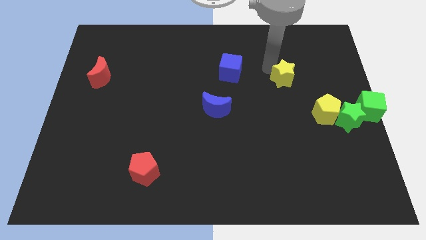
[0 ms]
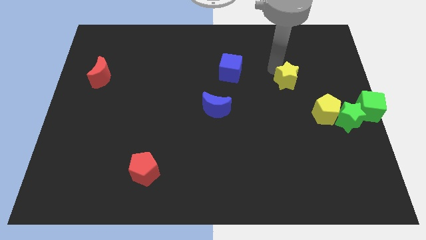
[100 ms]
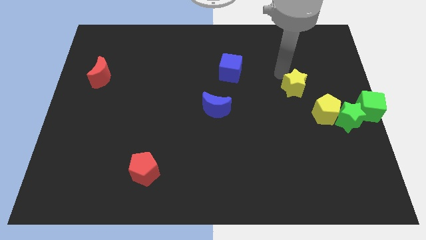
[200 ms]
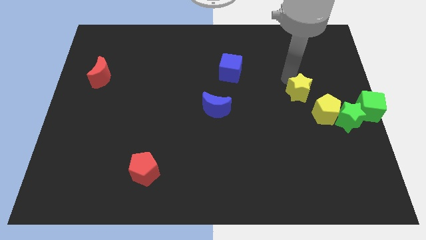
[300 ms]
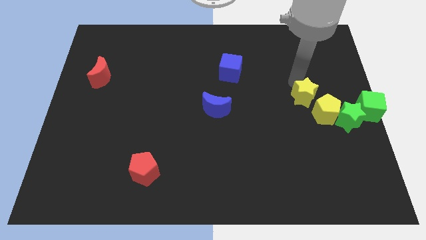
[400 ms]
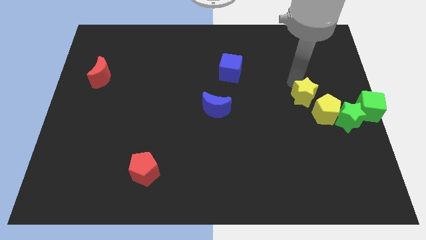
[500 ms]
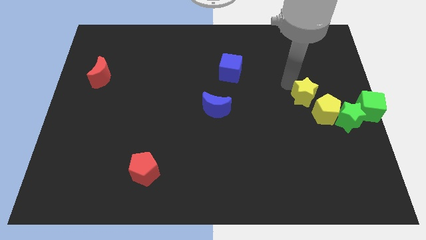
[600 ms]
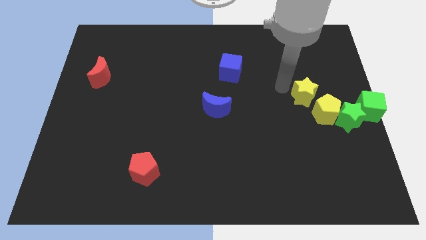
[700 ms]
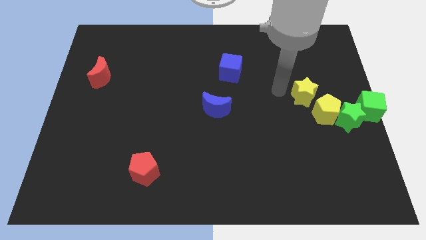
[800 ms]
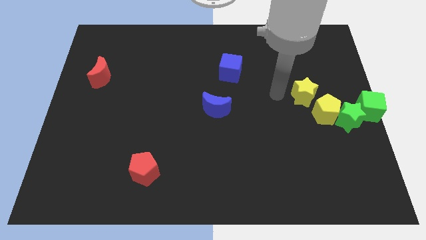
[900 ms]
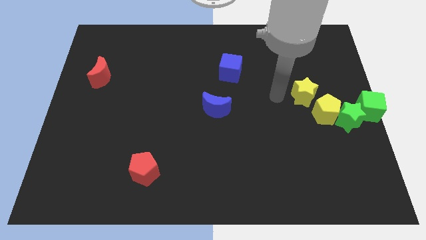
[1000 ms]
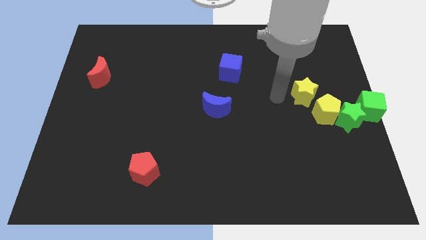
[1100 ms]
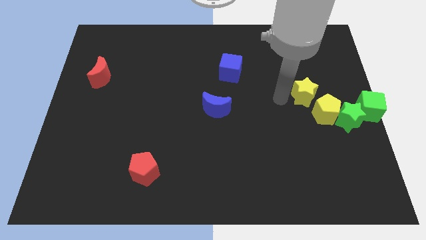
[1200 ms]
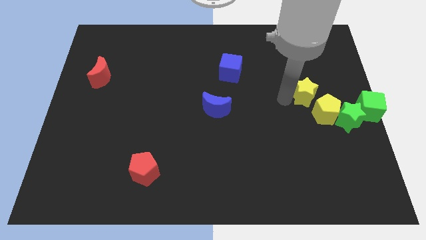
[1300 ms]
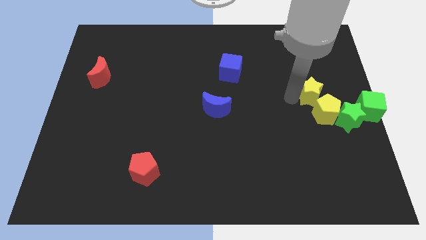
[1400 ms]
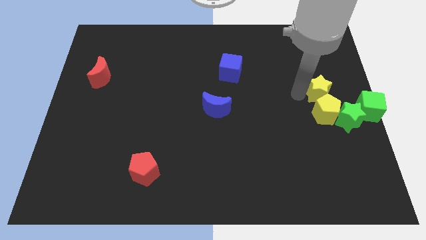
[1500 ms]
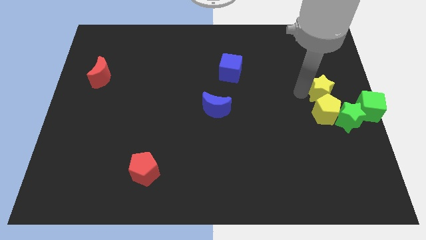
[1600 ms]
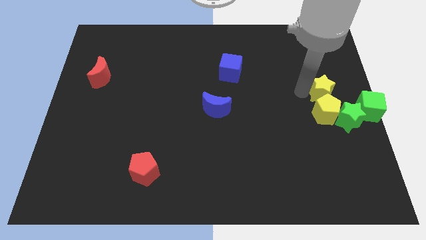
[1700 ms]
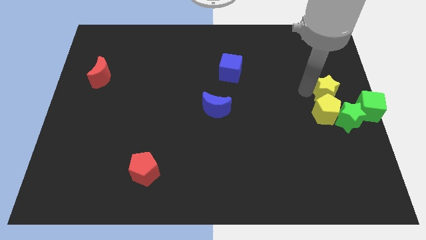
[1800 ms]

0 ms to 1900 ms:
slide the yellow star to the top side of the yellow pentagon

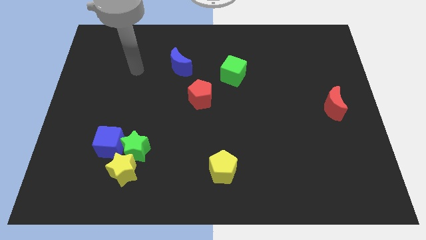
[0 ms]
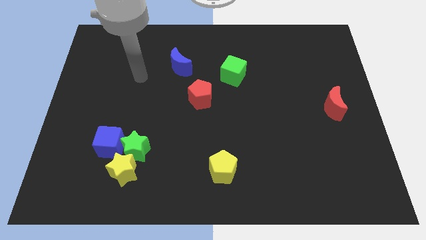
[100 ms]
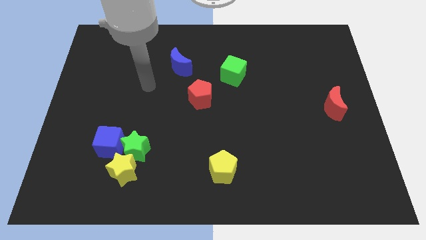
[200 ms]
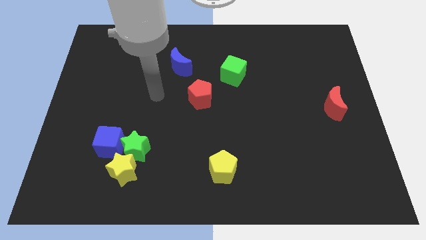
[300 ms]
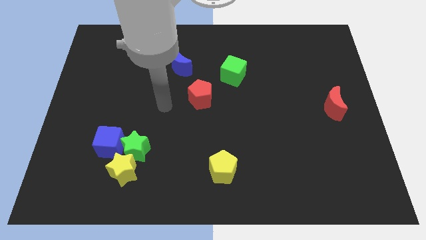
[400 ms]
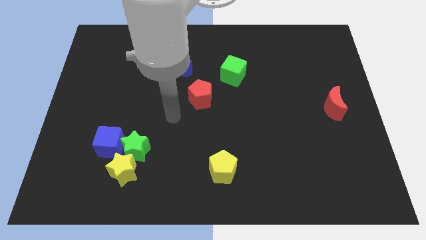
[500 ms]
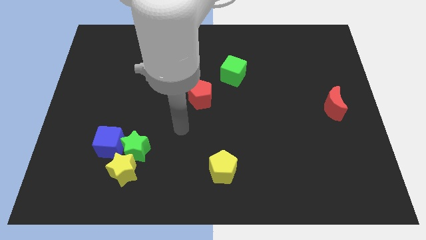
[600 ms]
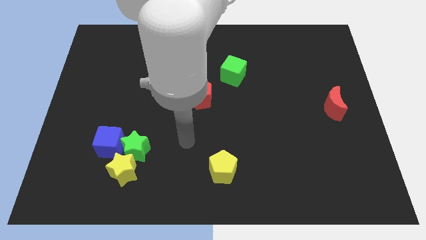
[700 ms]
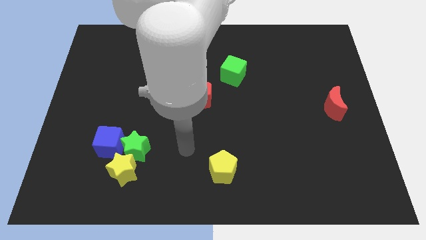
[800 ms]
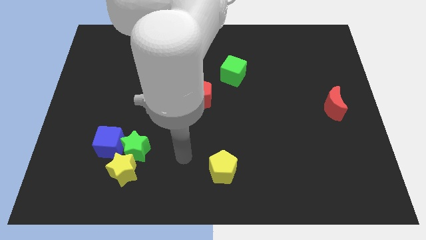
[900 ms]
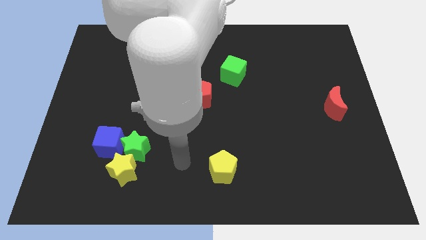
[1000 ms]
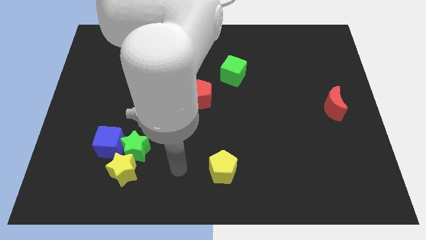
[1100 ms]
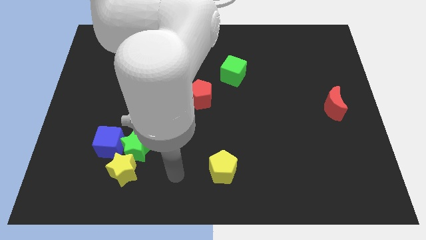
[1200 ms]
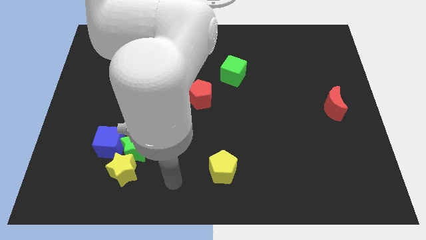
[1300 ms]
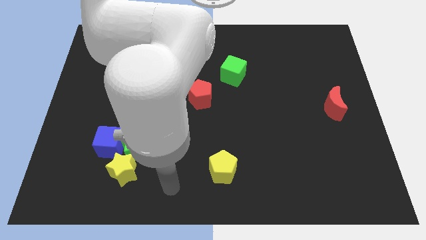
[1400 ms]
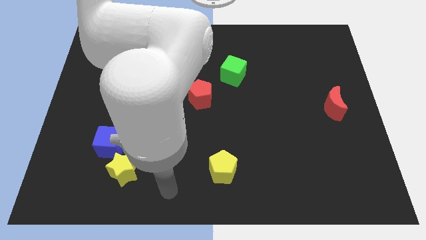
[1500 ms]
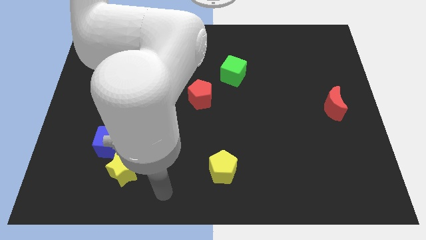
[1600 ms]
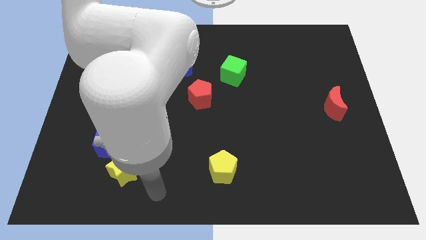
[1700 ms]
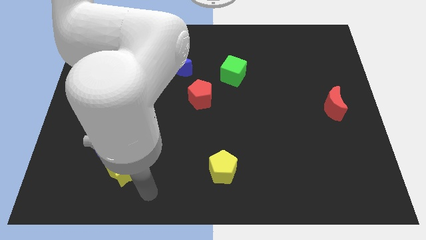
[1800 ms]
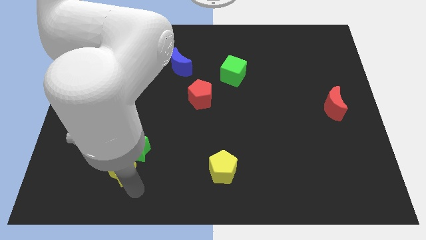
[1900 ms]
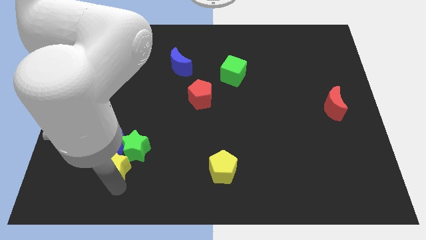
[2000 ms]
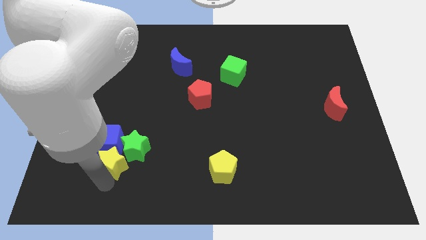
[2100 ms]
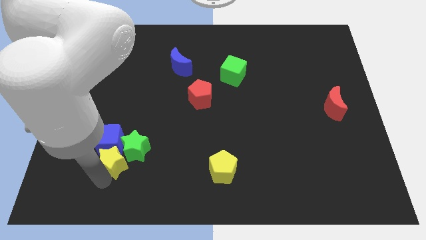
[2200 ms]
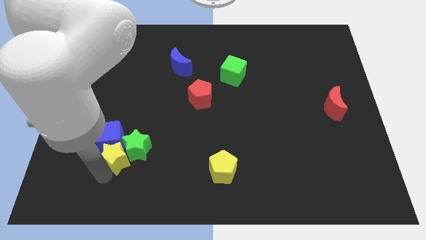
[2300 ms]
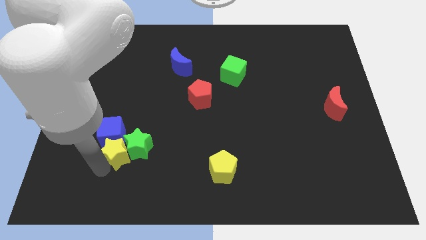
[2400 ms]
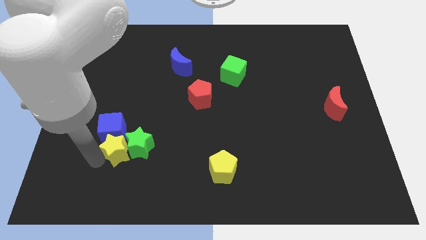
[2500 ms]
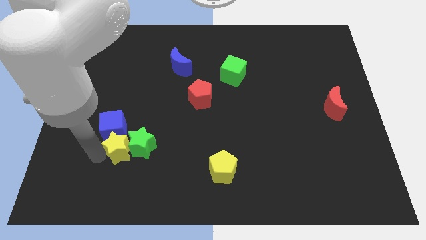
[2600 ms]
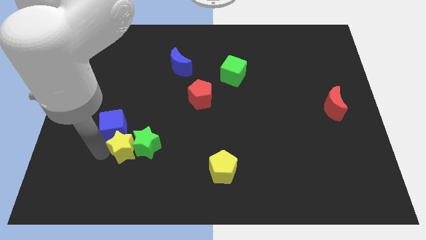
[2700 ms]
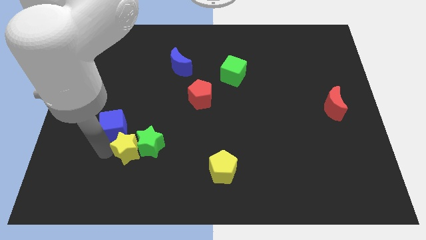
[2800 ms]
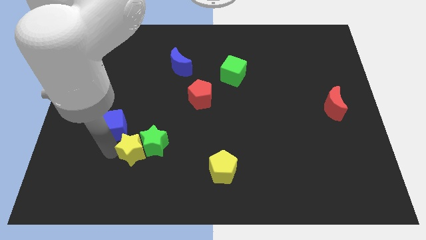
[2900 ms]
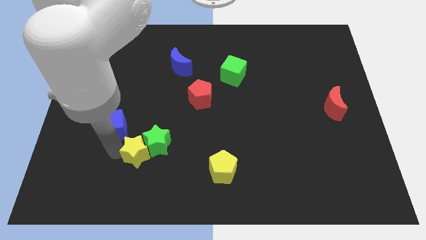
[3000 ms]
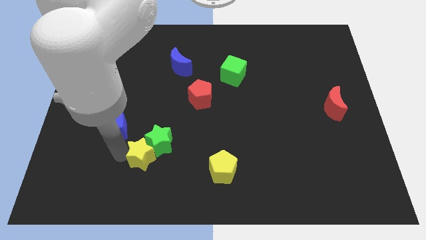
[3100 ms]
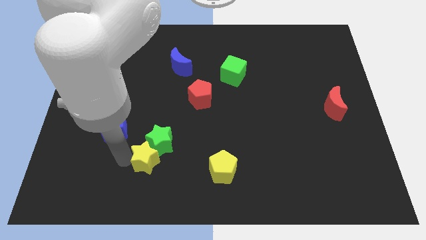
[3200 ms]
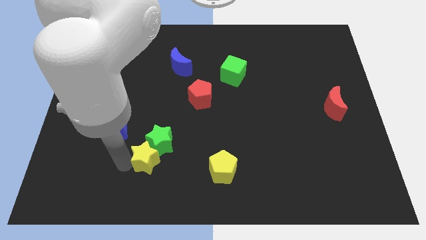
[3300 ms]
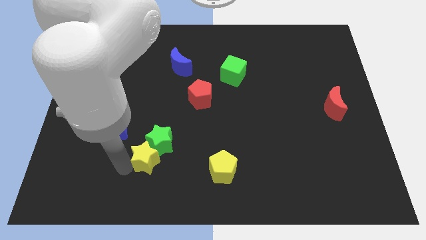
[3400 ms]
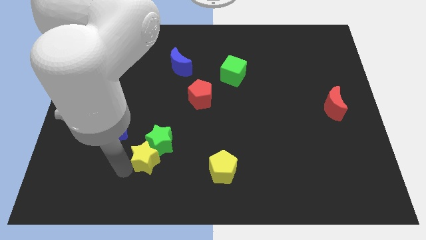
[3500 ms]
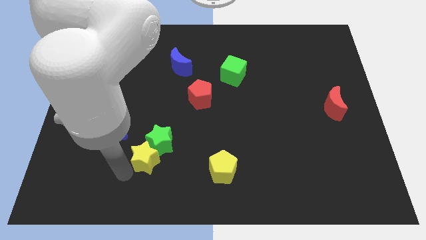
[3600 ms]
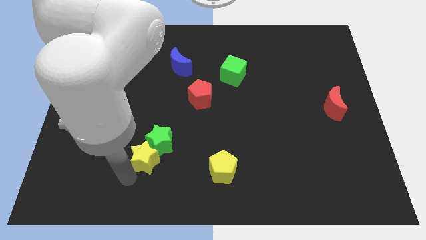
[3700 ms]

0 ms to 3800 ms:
separate the blue cube from yellow and green star

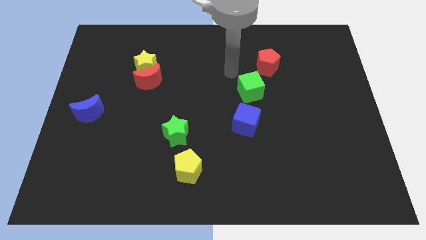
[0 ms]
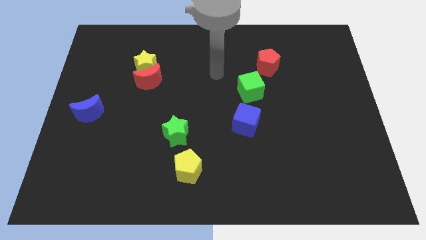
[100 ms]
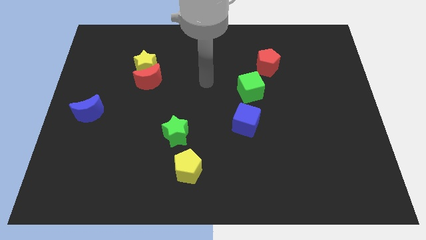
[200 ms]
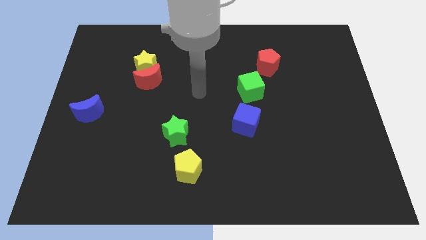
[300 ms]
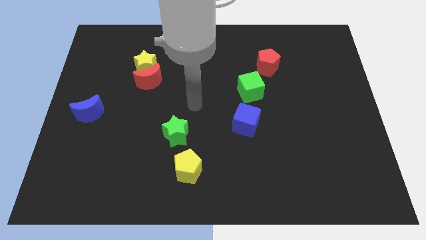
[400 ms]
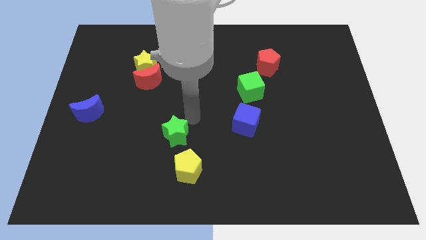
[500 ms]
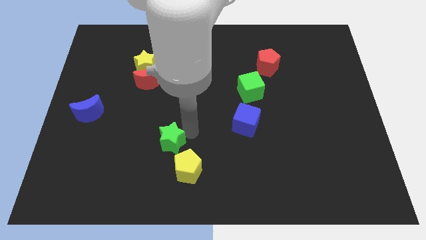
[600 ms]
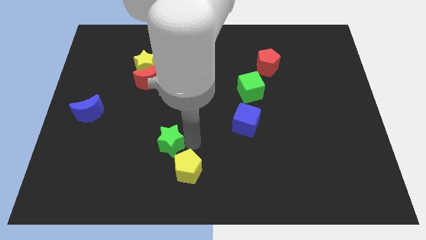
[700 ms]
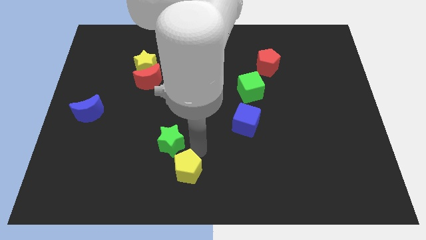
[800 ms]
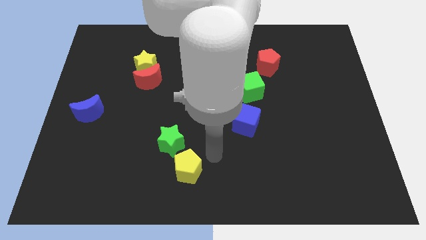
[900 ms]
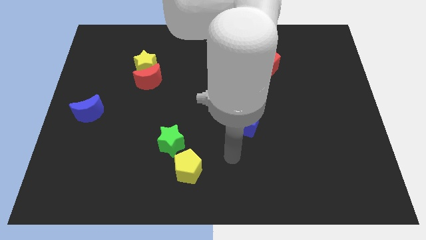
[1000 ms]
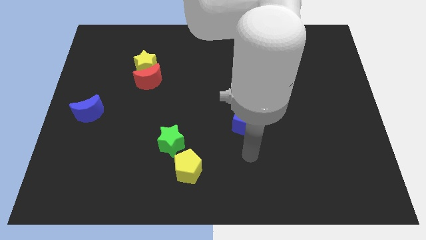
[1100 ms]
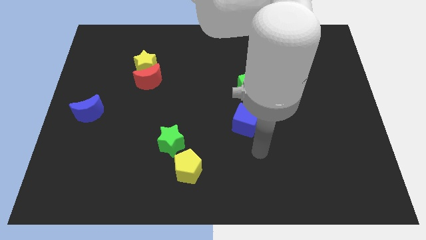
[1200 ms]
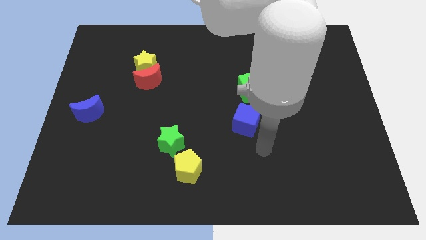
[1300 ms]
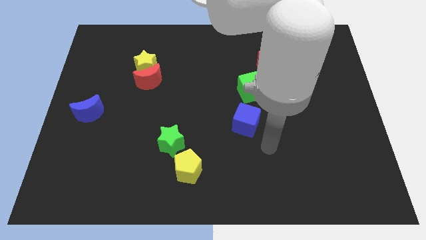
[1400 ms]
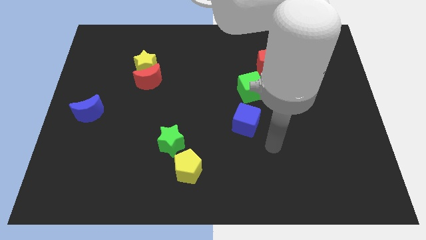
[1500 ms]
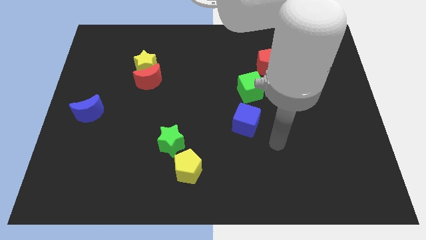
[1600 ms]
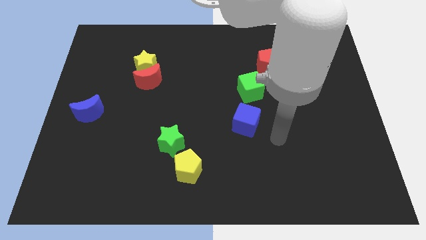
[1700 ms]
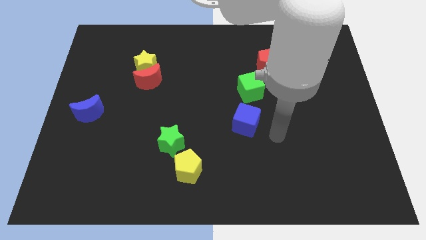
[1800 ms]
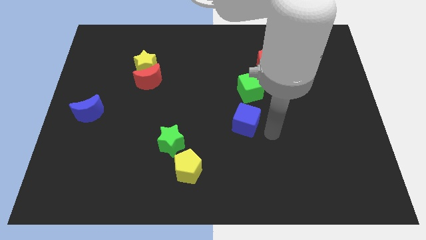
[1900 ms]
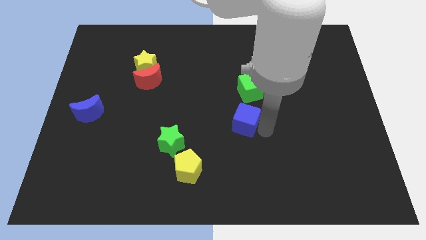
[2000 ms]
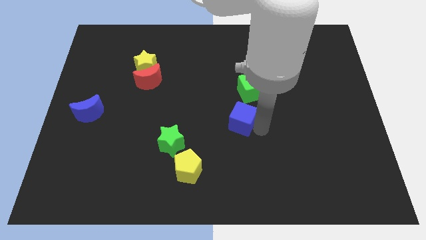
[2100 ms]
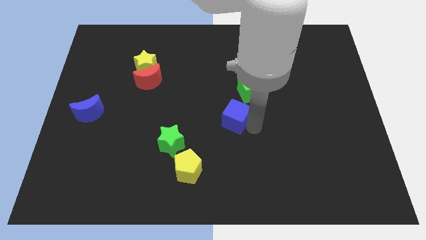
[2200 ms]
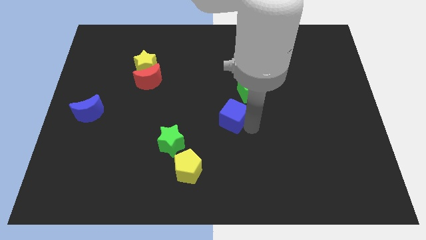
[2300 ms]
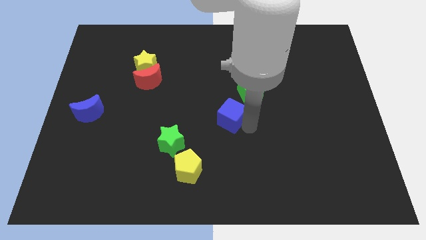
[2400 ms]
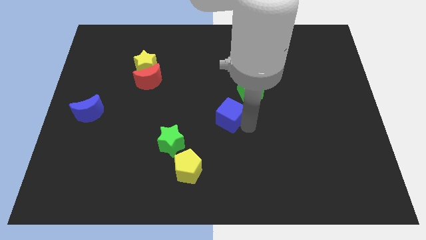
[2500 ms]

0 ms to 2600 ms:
push the green star towards the yellow pentagon

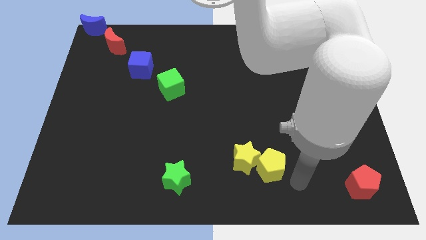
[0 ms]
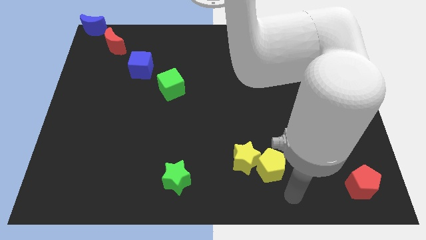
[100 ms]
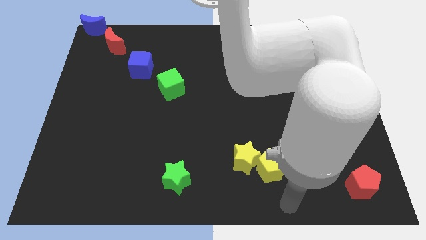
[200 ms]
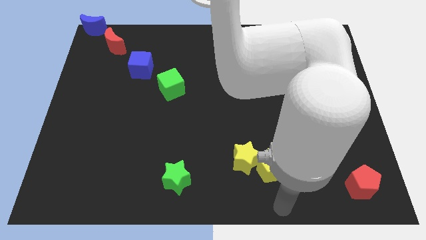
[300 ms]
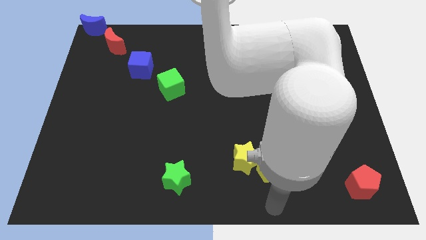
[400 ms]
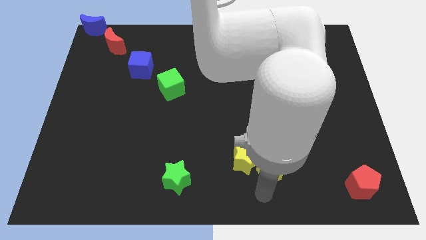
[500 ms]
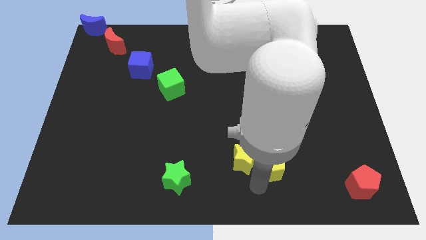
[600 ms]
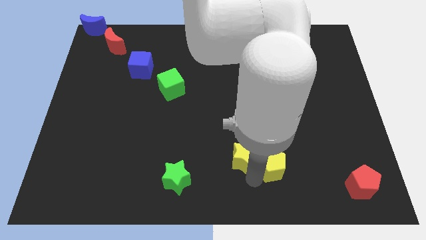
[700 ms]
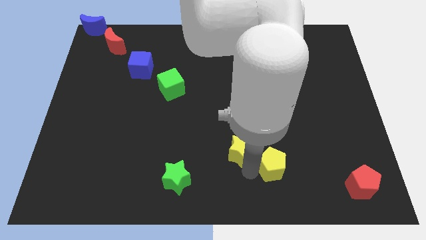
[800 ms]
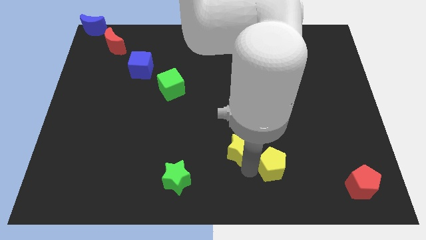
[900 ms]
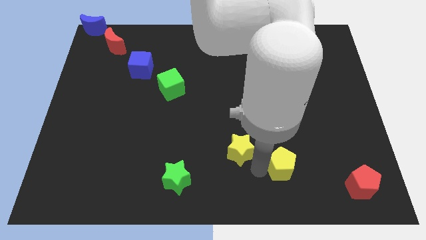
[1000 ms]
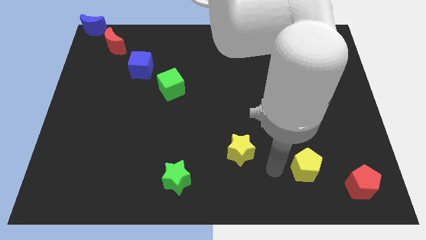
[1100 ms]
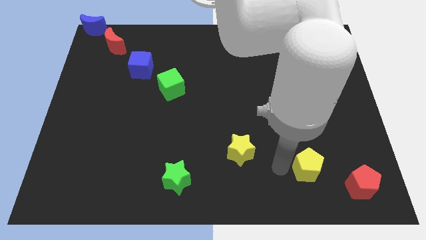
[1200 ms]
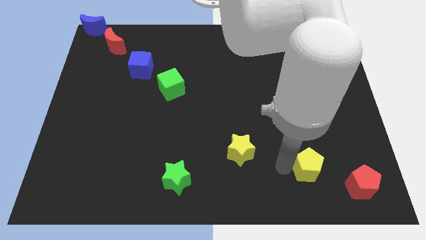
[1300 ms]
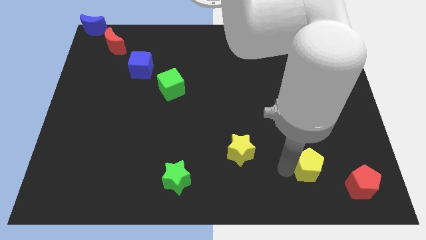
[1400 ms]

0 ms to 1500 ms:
separate the yellow star and yellow pentagon
